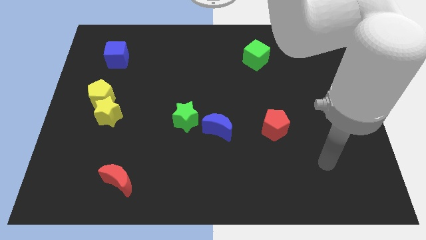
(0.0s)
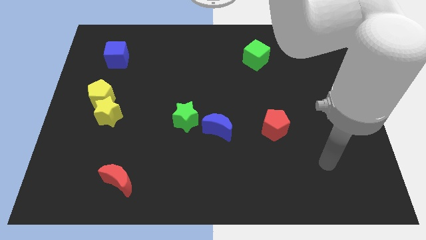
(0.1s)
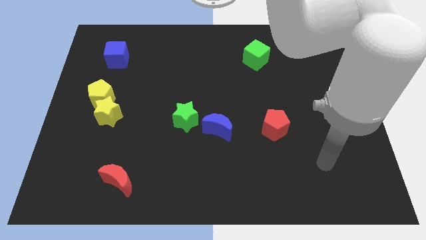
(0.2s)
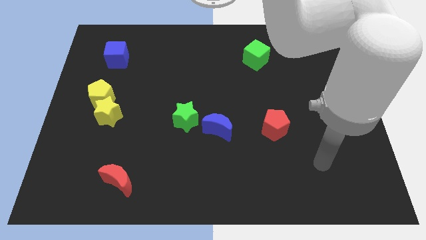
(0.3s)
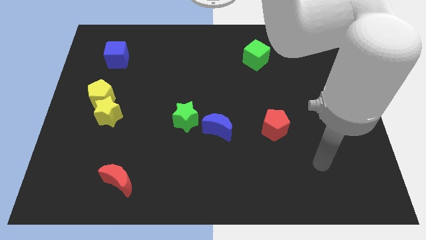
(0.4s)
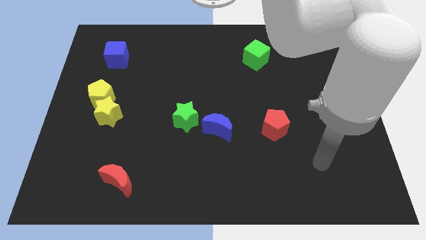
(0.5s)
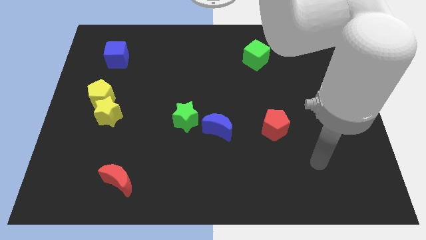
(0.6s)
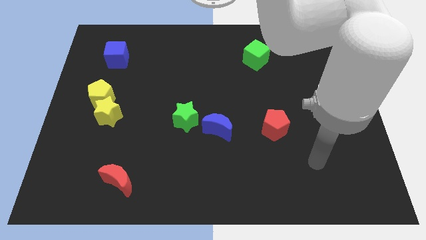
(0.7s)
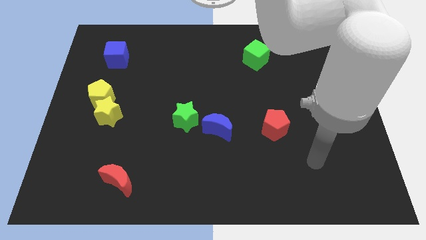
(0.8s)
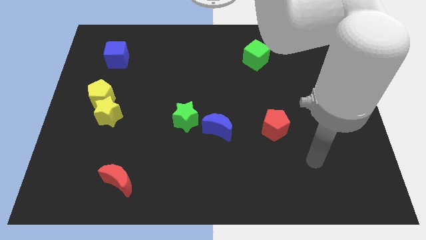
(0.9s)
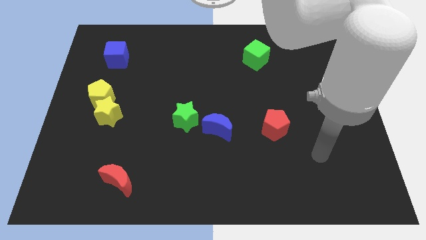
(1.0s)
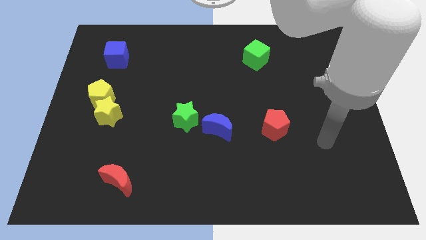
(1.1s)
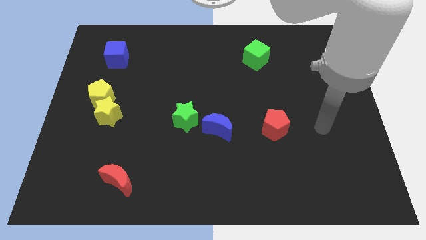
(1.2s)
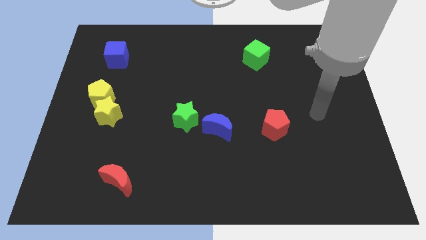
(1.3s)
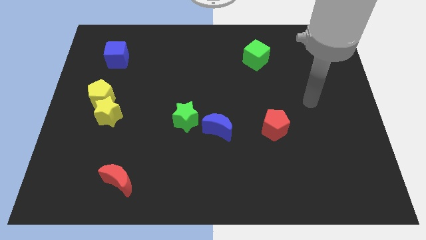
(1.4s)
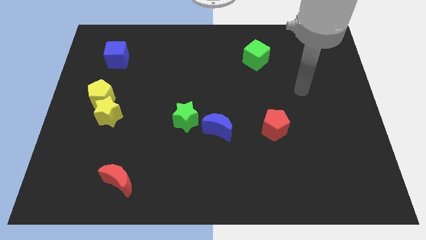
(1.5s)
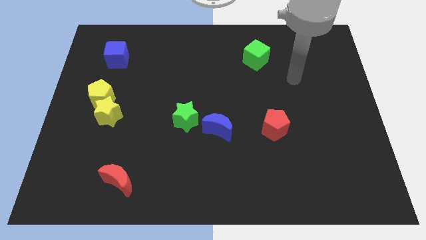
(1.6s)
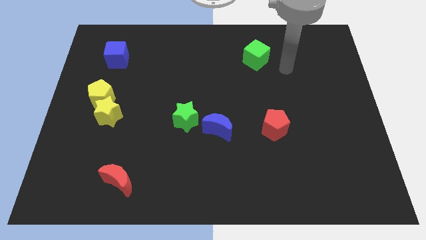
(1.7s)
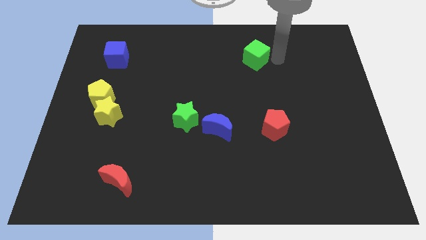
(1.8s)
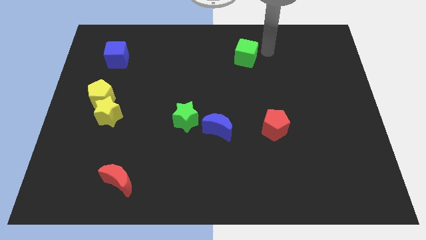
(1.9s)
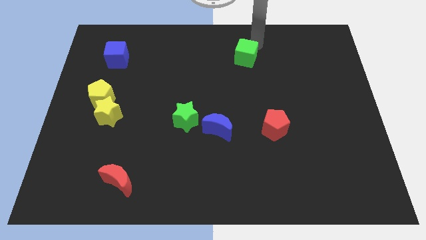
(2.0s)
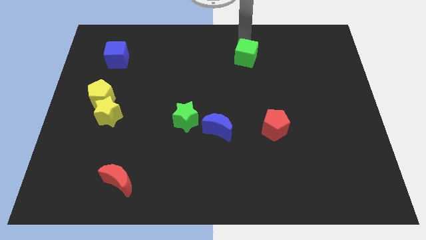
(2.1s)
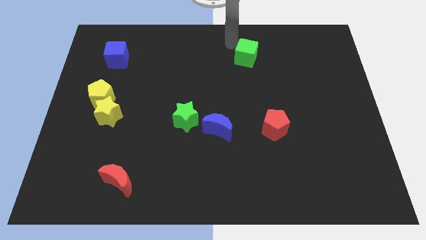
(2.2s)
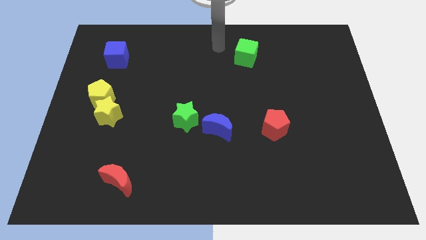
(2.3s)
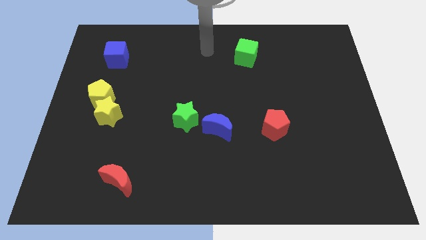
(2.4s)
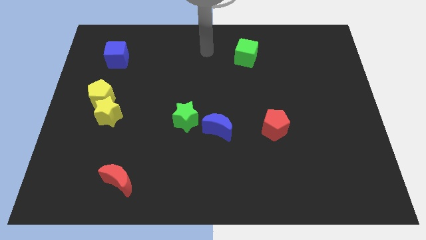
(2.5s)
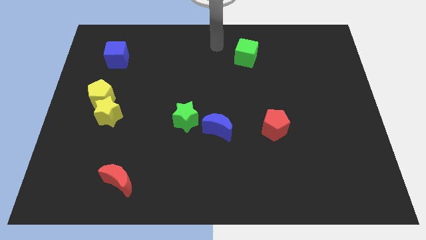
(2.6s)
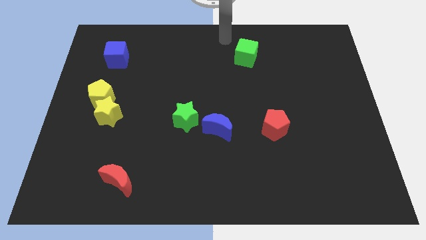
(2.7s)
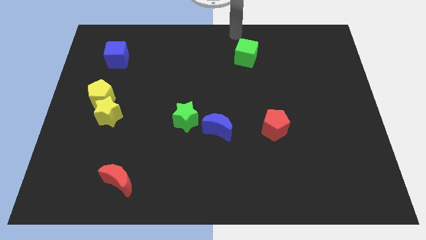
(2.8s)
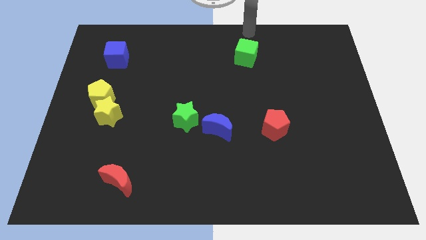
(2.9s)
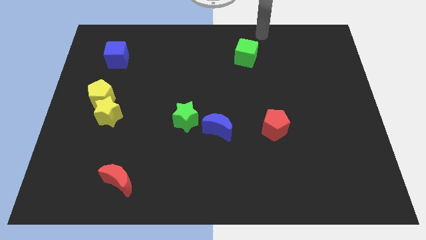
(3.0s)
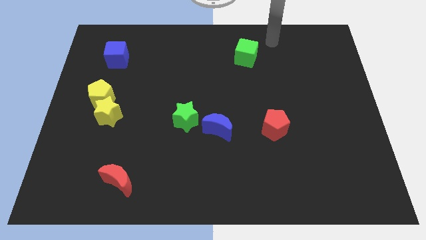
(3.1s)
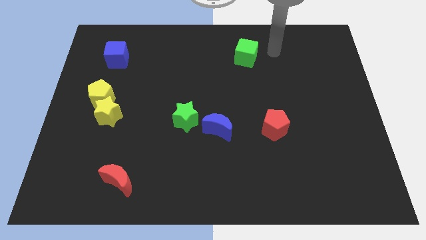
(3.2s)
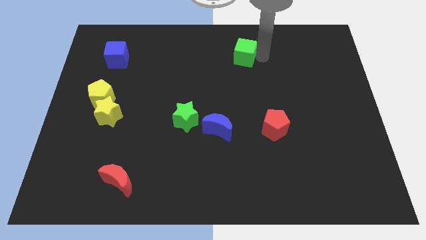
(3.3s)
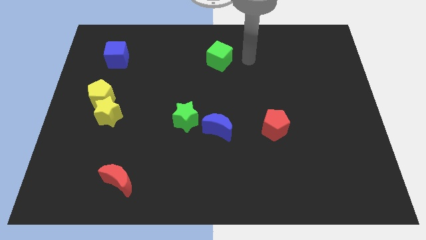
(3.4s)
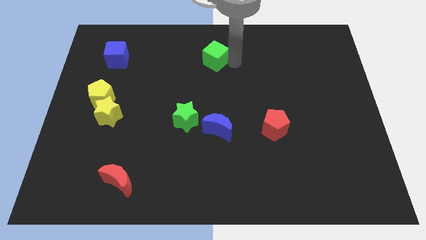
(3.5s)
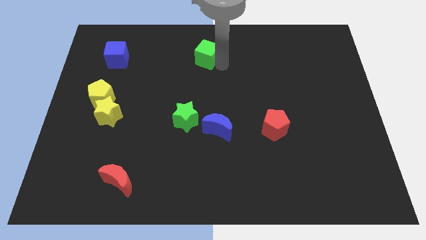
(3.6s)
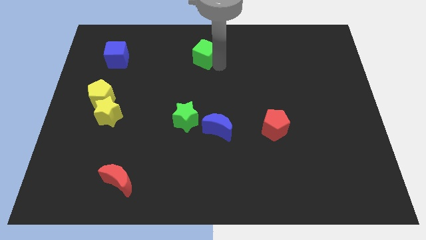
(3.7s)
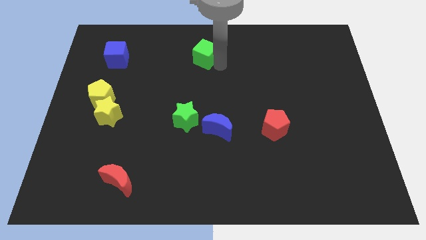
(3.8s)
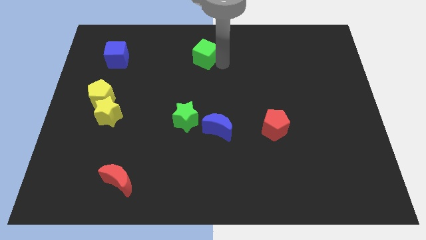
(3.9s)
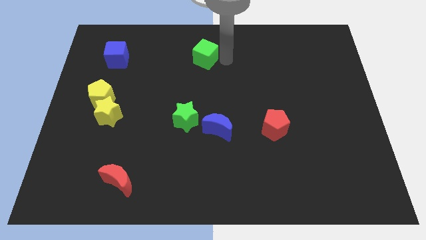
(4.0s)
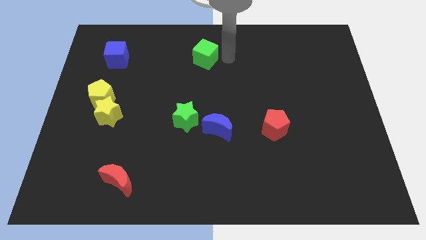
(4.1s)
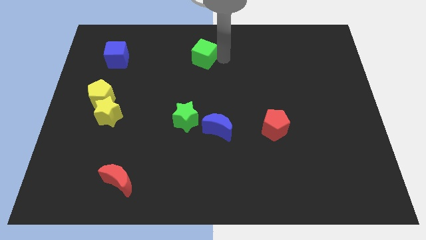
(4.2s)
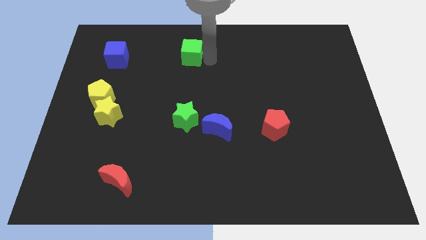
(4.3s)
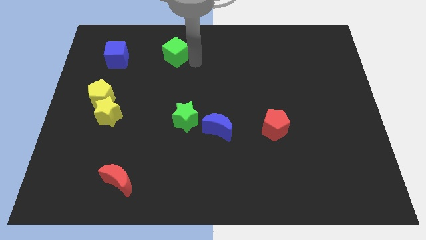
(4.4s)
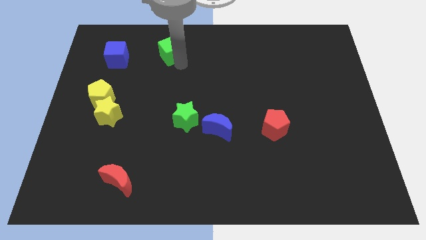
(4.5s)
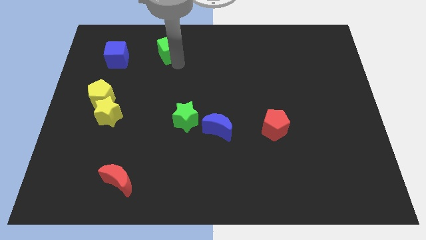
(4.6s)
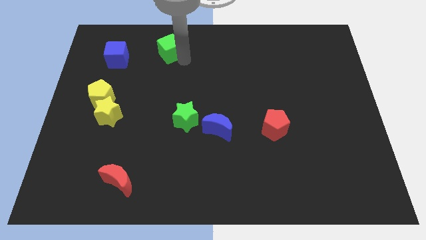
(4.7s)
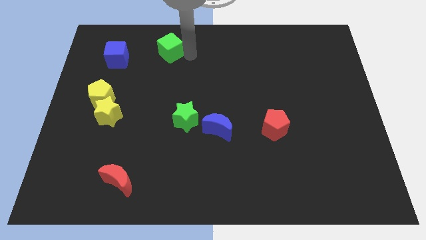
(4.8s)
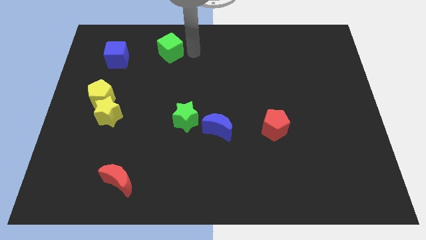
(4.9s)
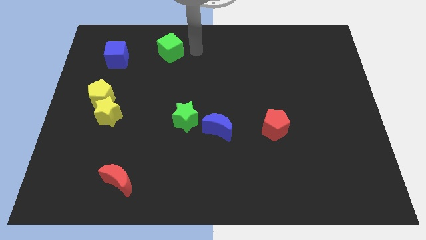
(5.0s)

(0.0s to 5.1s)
move the green cube towards the blue cube

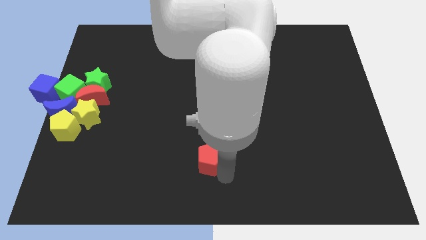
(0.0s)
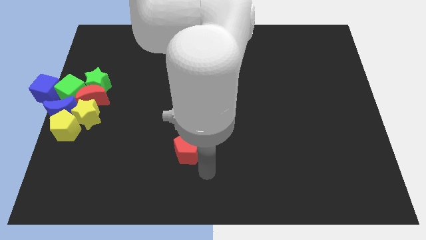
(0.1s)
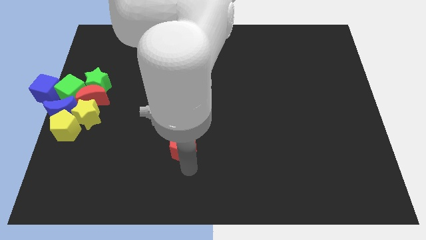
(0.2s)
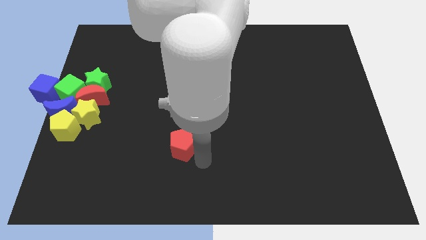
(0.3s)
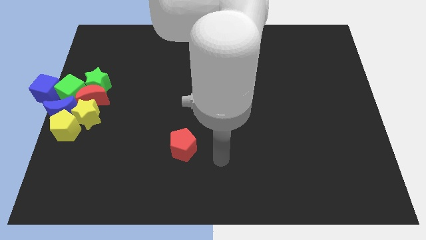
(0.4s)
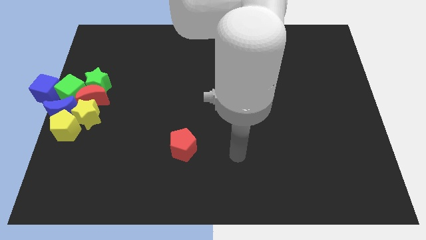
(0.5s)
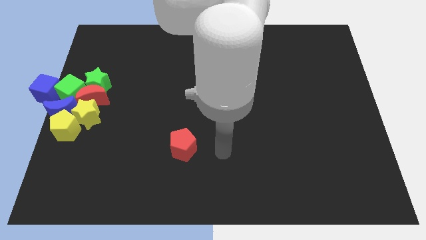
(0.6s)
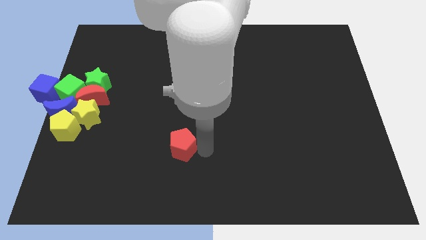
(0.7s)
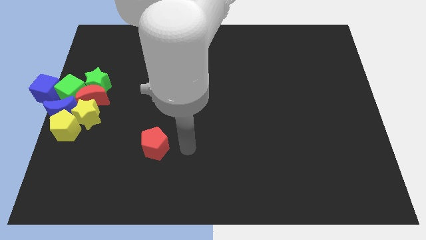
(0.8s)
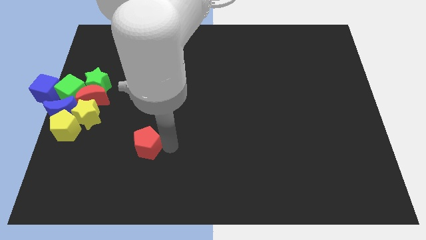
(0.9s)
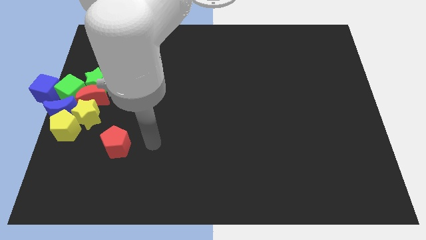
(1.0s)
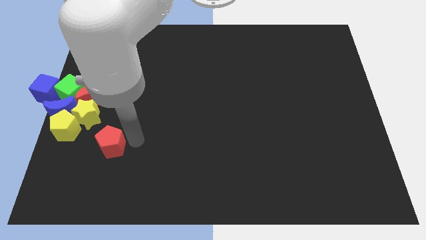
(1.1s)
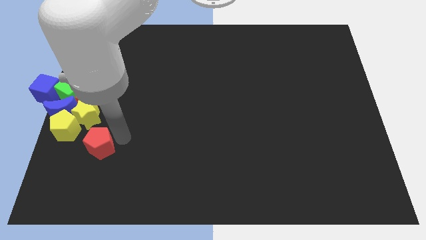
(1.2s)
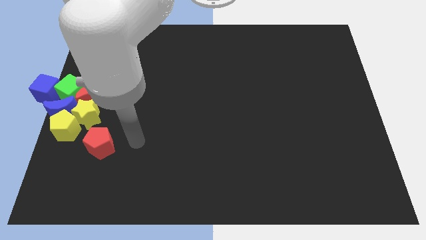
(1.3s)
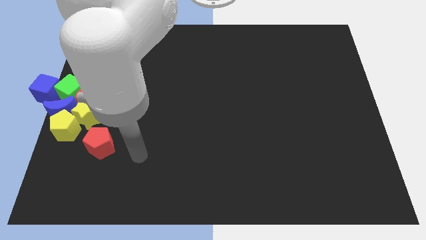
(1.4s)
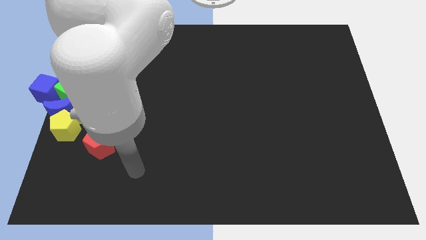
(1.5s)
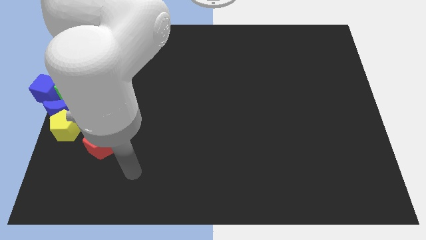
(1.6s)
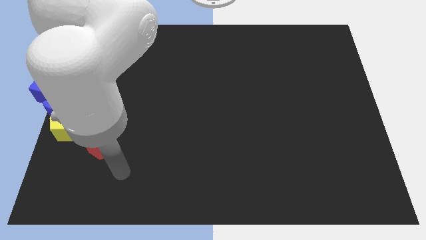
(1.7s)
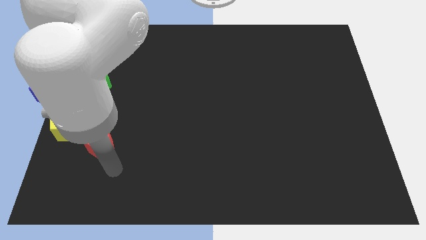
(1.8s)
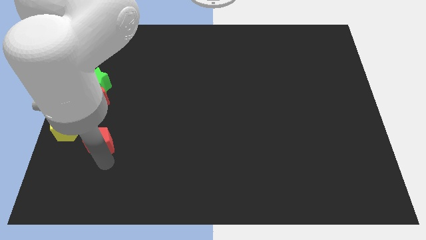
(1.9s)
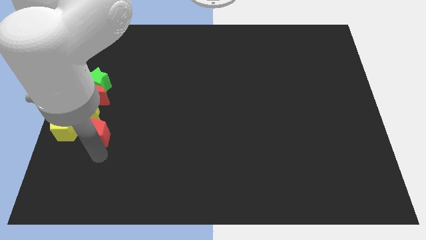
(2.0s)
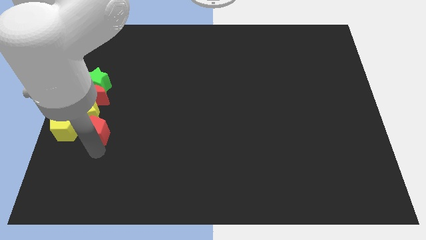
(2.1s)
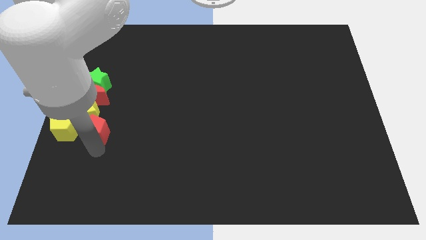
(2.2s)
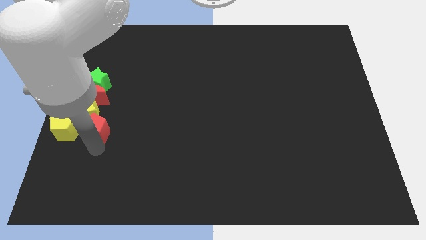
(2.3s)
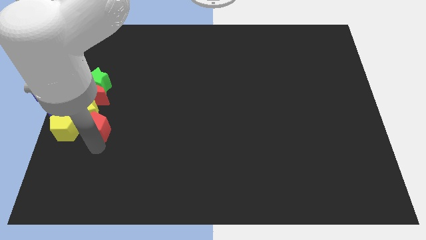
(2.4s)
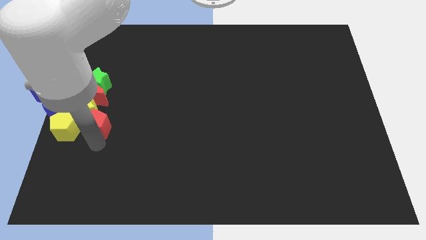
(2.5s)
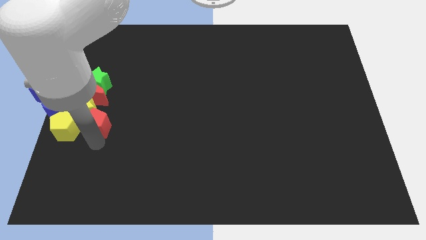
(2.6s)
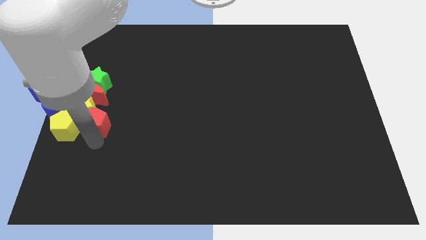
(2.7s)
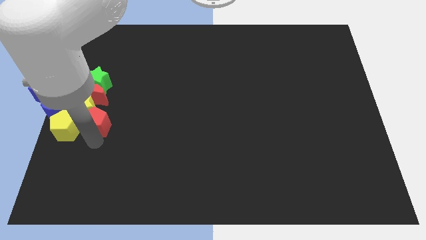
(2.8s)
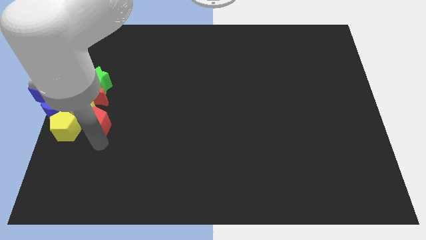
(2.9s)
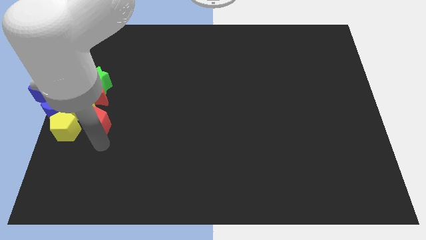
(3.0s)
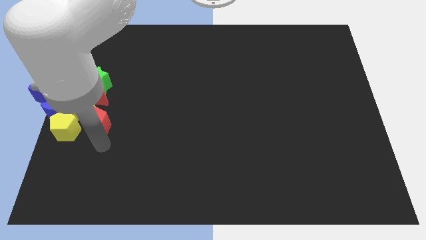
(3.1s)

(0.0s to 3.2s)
move the red pentagon towards a group of blocks at the left of the center of board

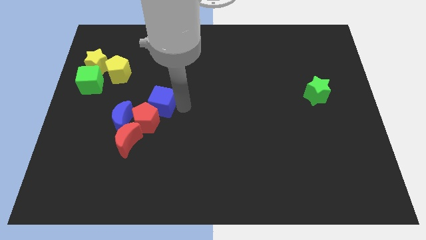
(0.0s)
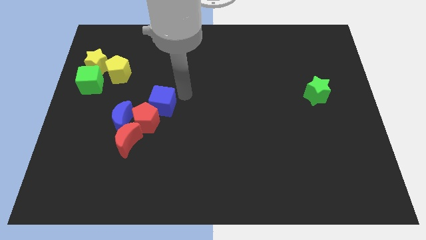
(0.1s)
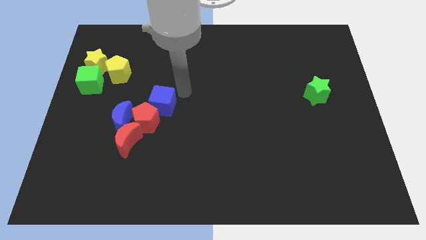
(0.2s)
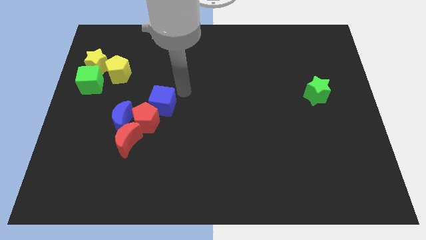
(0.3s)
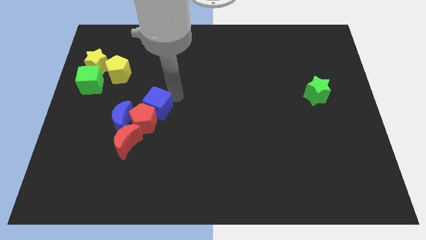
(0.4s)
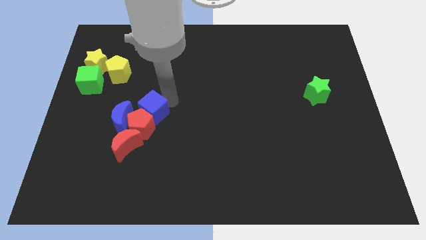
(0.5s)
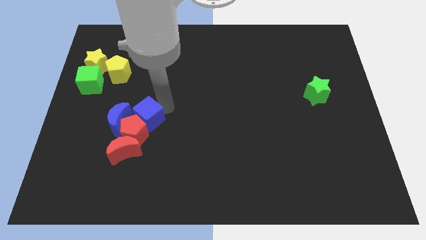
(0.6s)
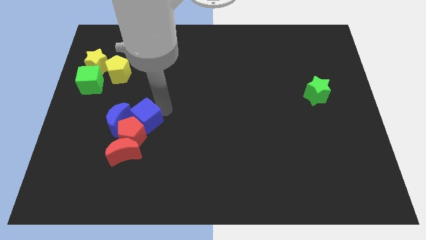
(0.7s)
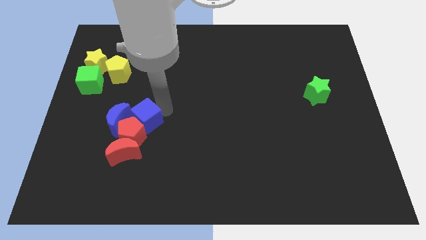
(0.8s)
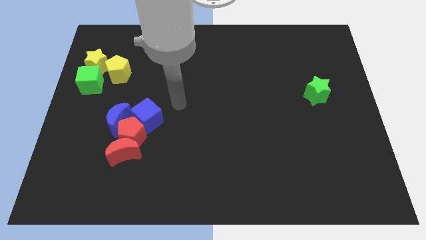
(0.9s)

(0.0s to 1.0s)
push blue cube slightly towards down

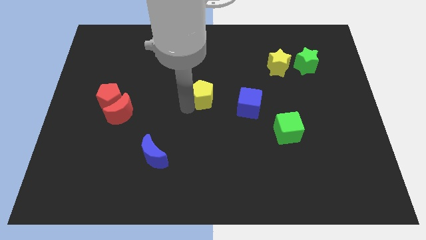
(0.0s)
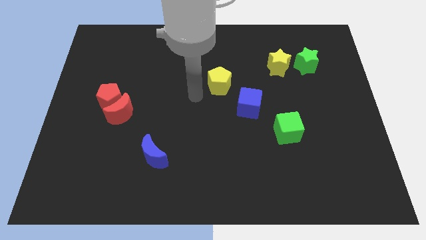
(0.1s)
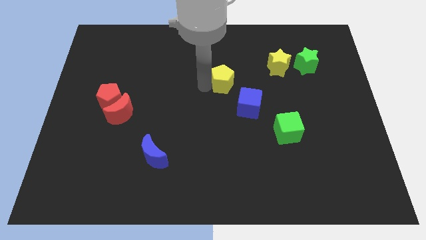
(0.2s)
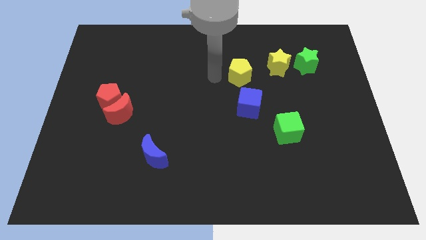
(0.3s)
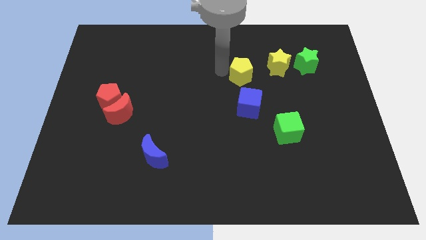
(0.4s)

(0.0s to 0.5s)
place the yellow pentagon above the blue cube
